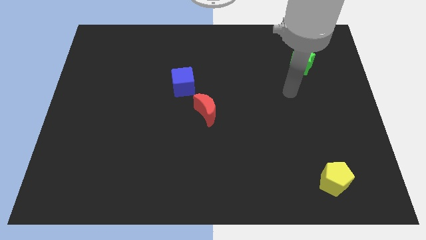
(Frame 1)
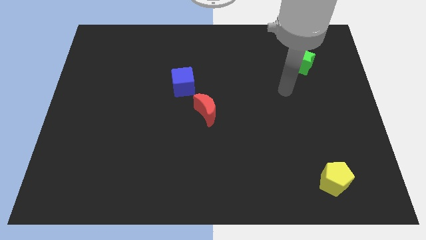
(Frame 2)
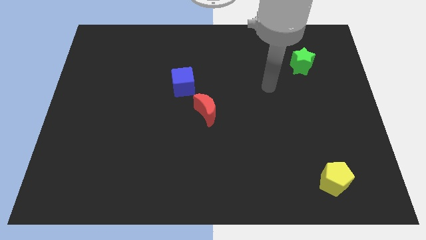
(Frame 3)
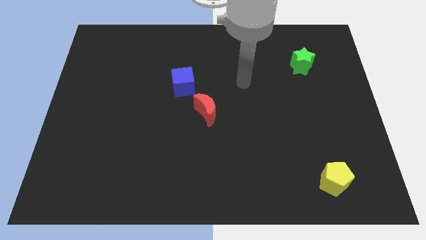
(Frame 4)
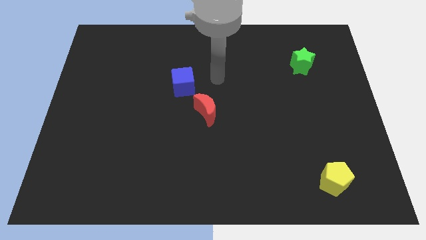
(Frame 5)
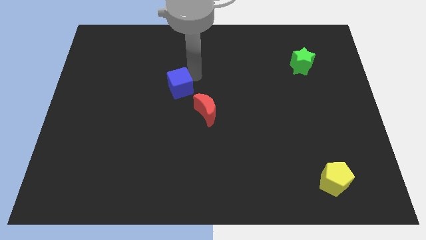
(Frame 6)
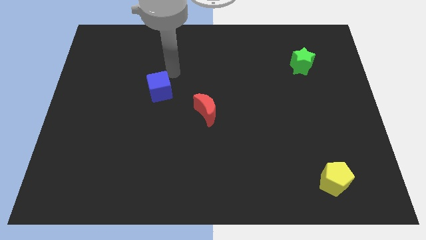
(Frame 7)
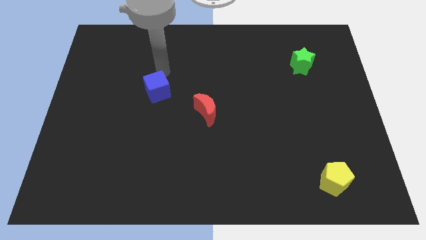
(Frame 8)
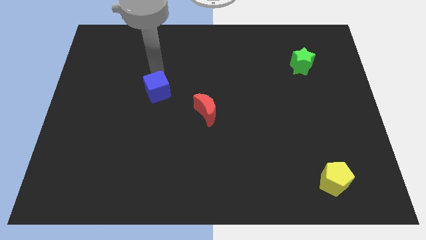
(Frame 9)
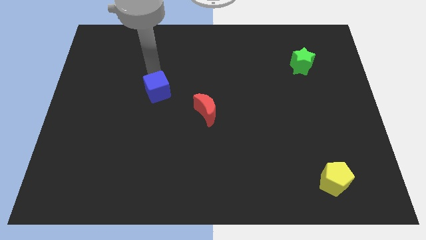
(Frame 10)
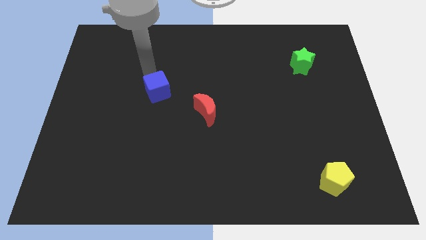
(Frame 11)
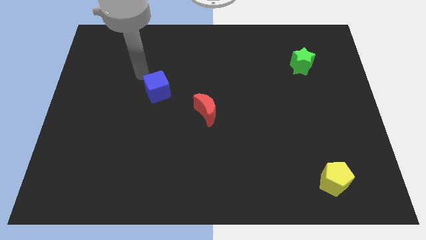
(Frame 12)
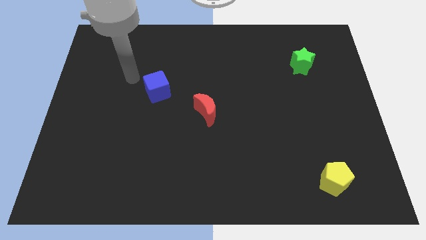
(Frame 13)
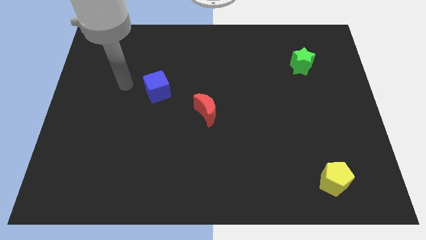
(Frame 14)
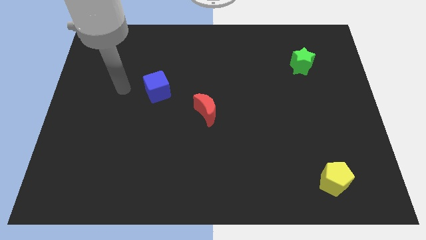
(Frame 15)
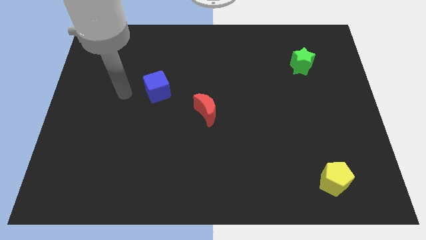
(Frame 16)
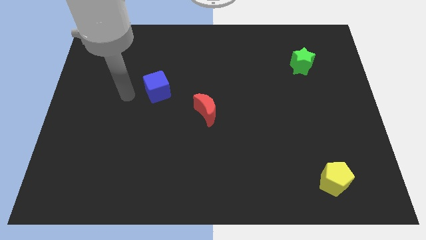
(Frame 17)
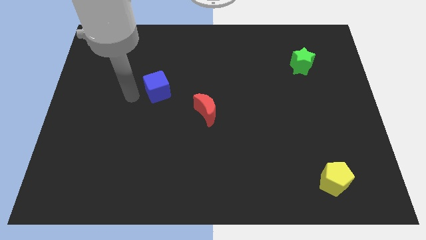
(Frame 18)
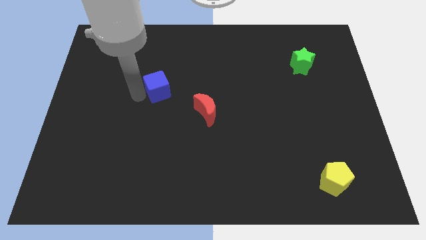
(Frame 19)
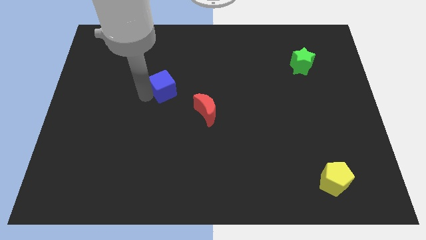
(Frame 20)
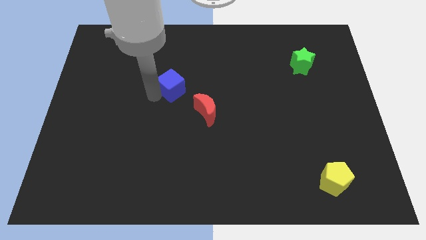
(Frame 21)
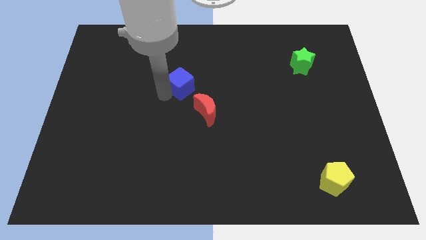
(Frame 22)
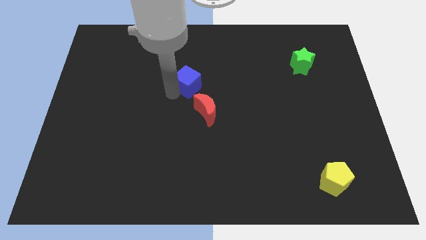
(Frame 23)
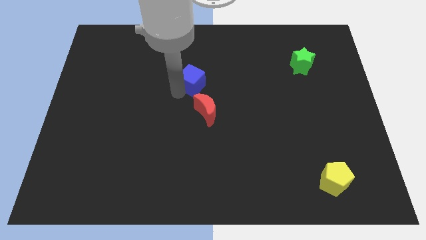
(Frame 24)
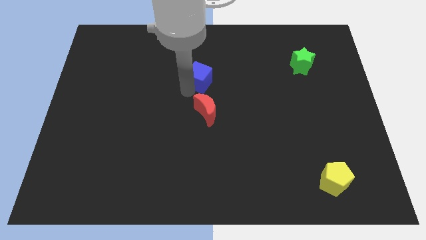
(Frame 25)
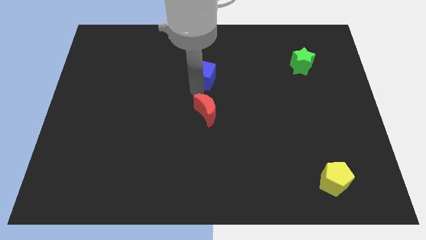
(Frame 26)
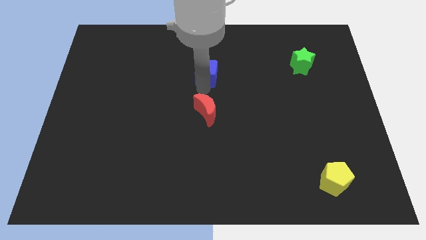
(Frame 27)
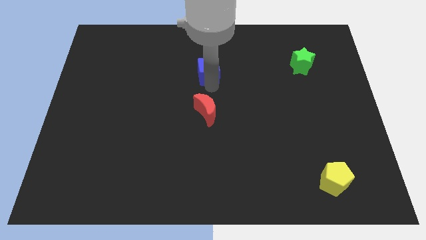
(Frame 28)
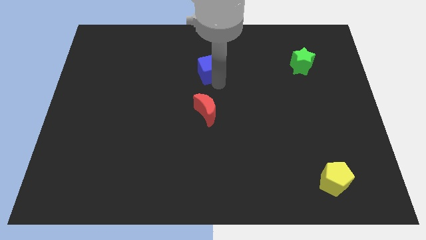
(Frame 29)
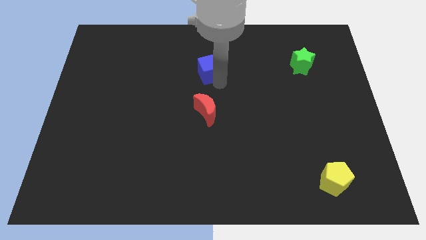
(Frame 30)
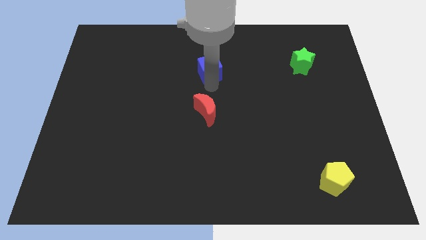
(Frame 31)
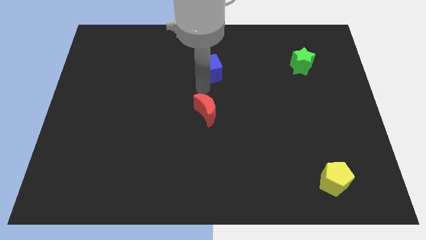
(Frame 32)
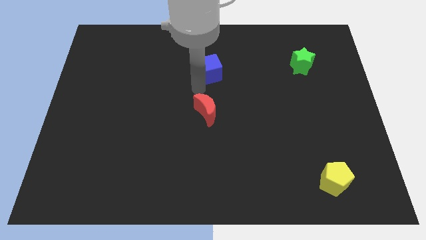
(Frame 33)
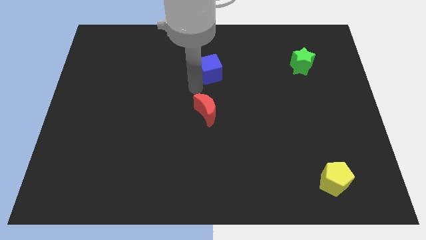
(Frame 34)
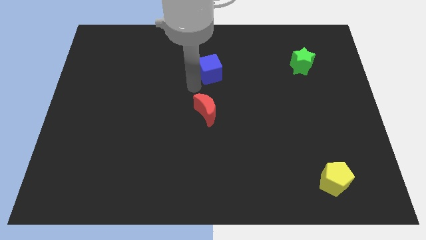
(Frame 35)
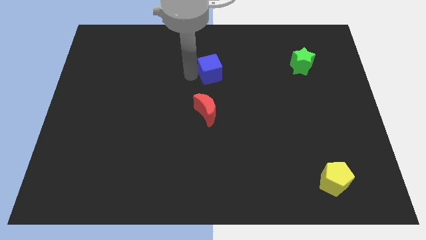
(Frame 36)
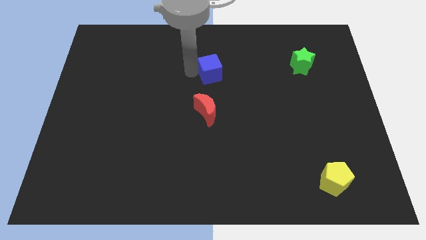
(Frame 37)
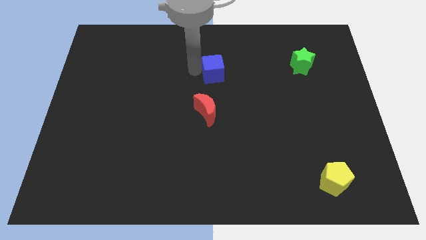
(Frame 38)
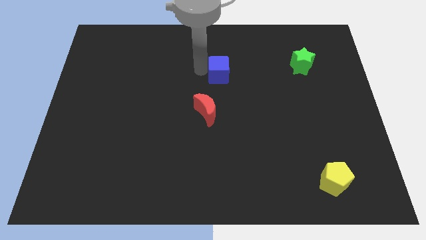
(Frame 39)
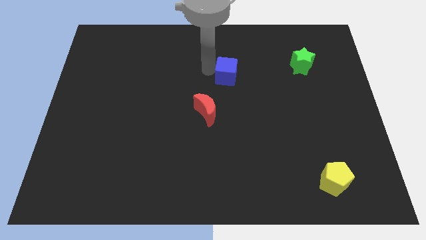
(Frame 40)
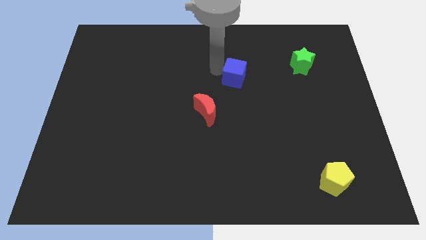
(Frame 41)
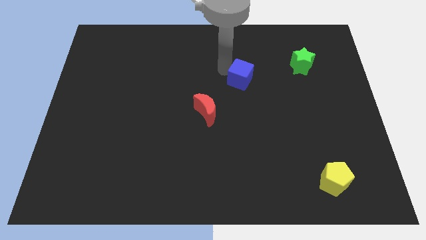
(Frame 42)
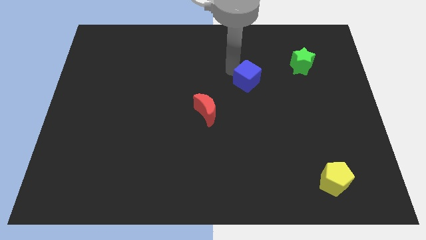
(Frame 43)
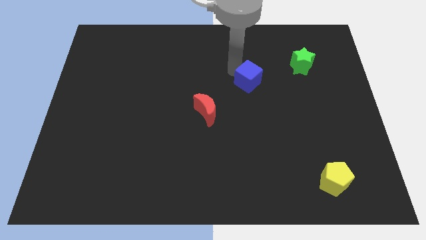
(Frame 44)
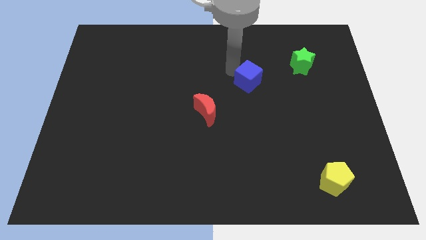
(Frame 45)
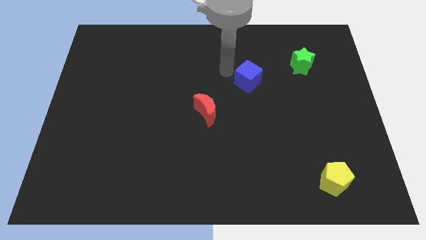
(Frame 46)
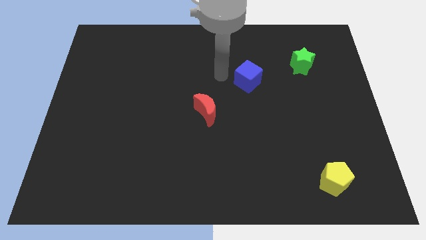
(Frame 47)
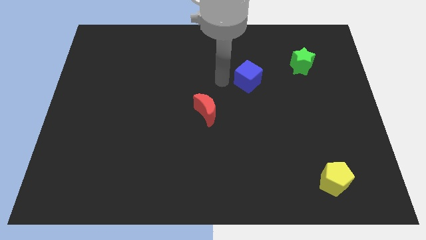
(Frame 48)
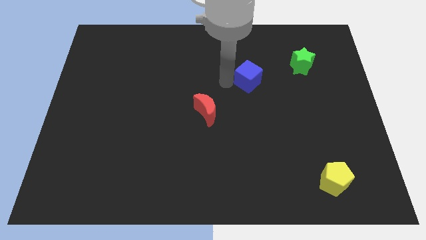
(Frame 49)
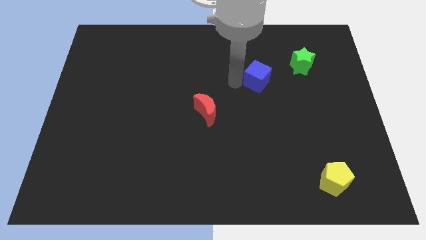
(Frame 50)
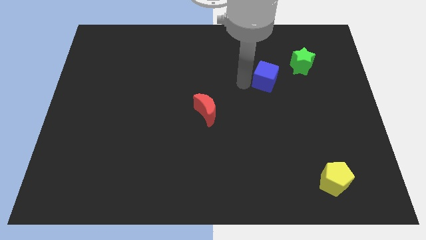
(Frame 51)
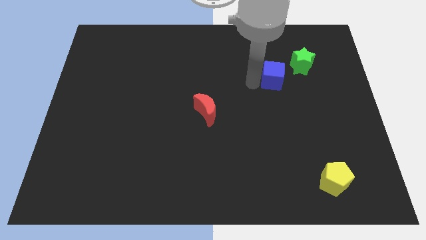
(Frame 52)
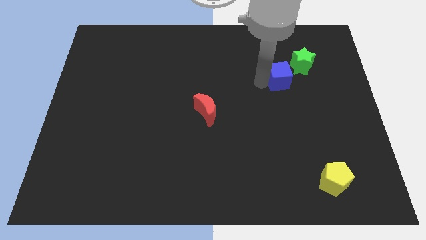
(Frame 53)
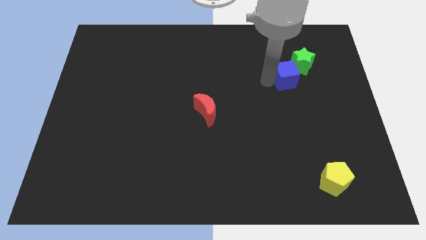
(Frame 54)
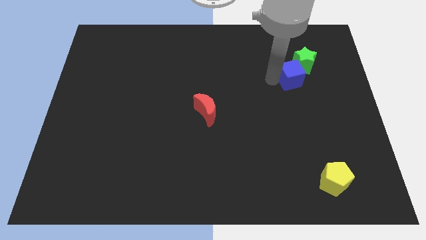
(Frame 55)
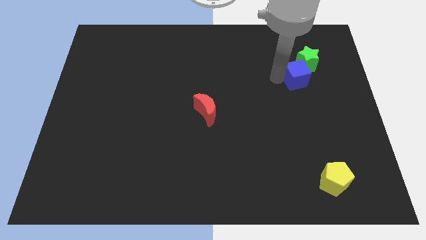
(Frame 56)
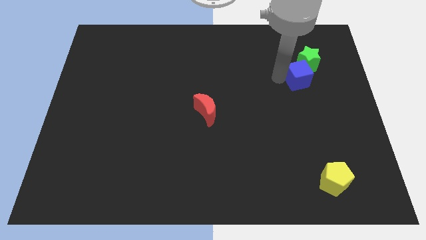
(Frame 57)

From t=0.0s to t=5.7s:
slide the blue cube towards the green star

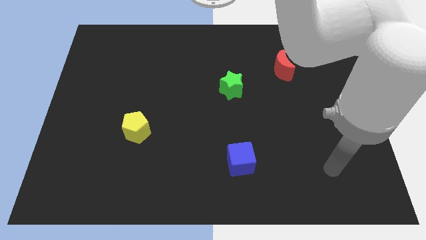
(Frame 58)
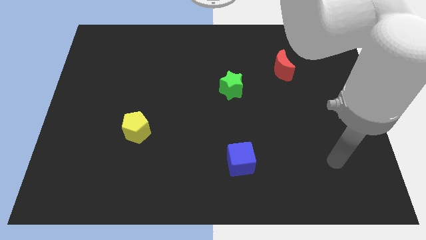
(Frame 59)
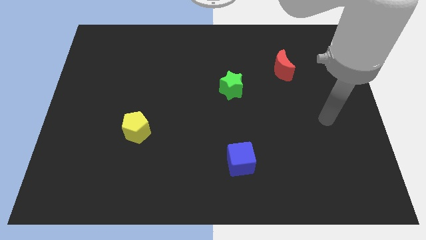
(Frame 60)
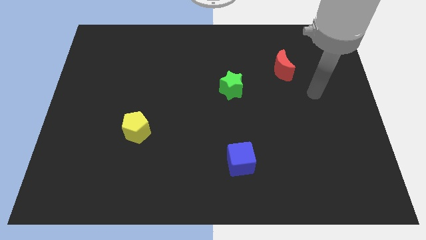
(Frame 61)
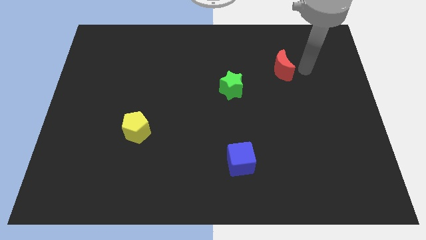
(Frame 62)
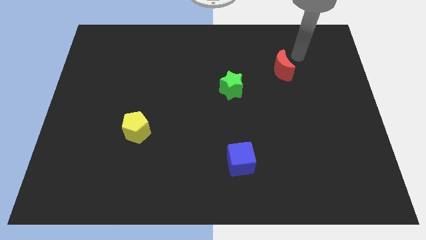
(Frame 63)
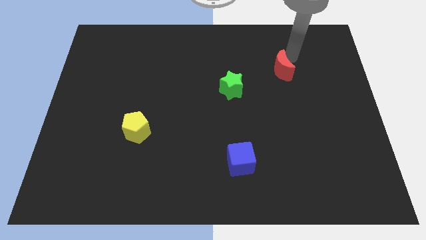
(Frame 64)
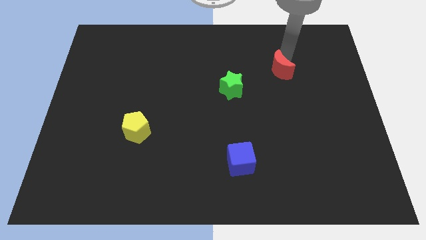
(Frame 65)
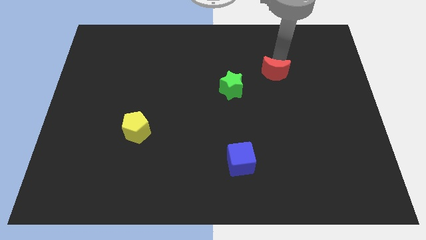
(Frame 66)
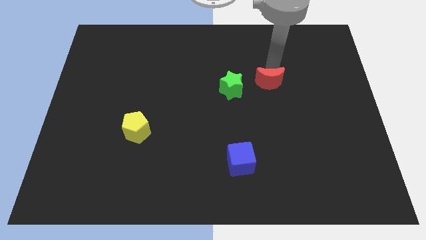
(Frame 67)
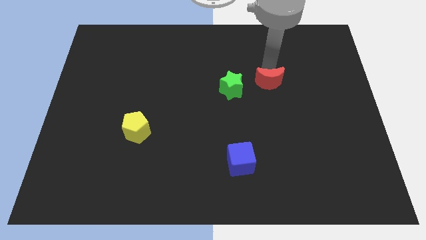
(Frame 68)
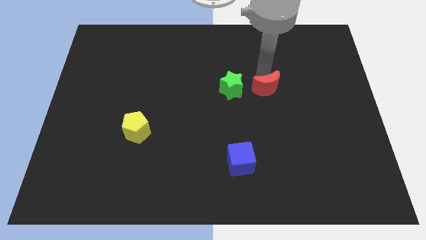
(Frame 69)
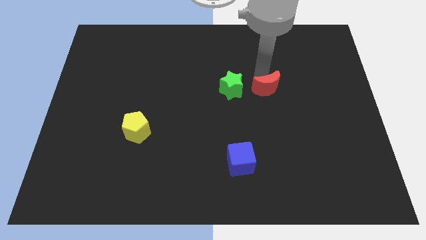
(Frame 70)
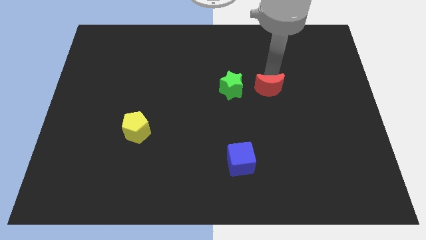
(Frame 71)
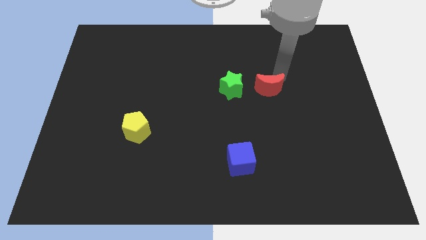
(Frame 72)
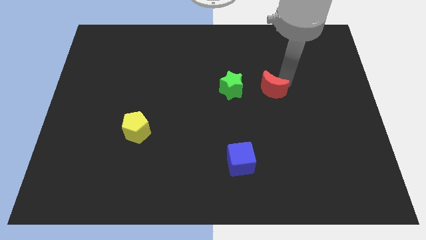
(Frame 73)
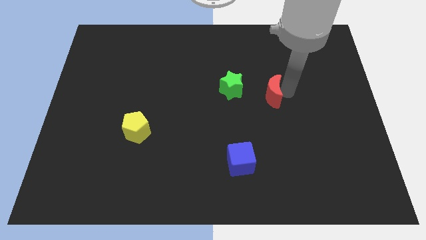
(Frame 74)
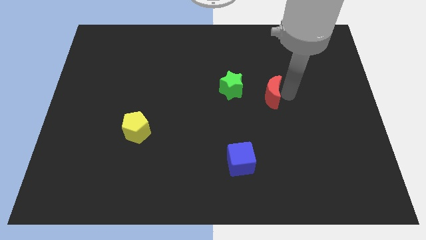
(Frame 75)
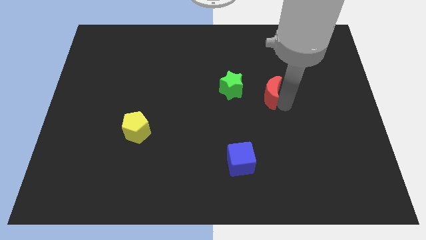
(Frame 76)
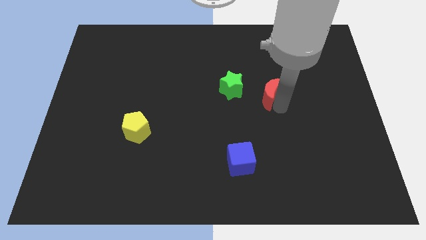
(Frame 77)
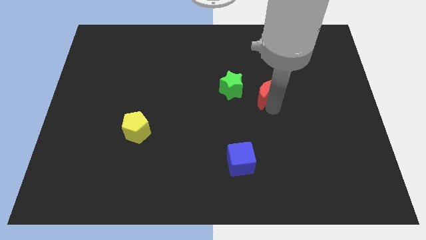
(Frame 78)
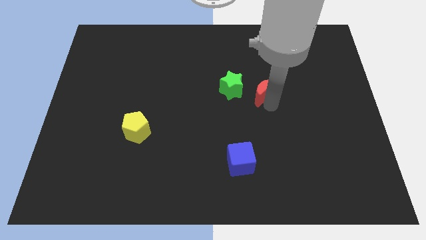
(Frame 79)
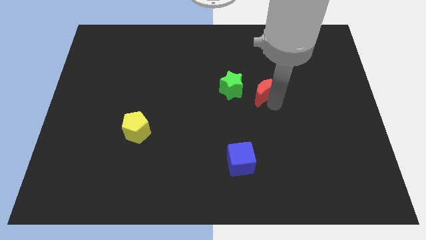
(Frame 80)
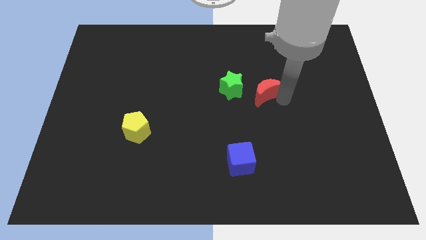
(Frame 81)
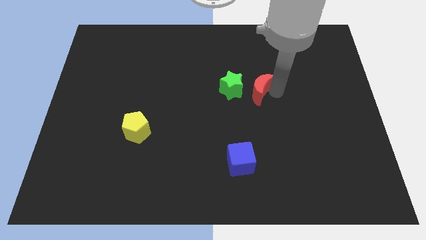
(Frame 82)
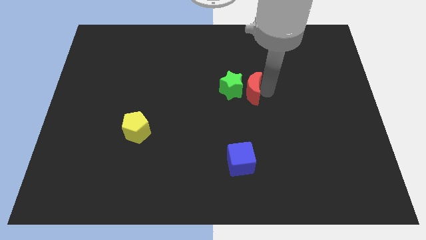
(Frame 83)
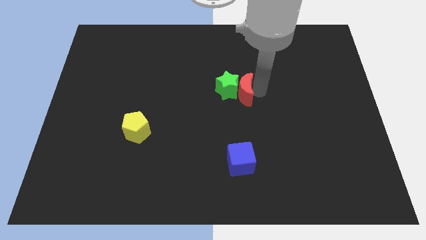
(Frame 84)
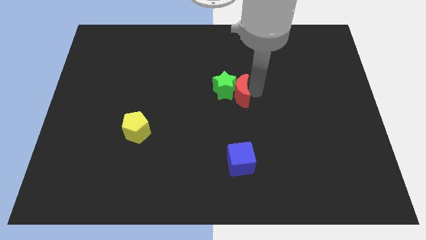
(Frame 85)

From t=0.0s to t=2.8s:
slide the red moon to the green star
